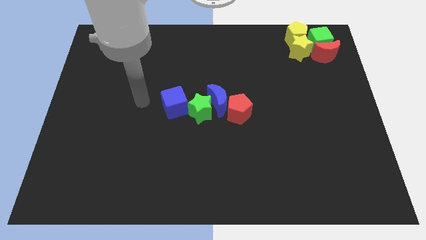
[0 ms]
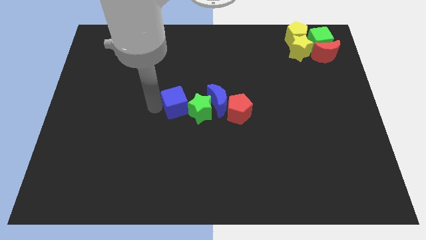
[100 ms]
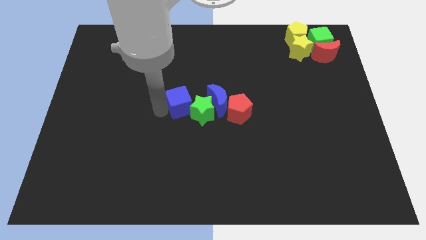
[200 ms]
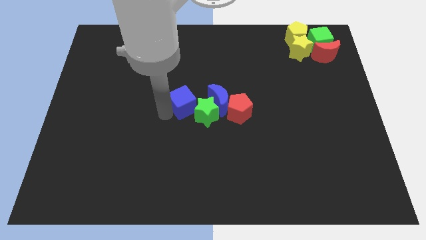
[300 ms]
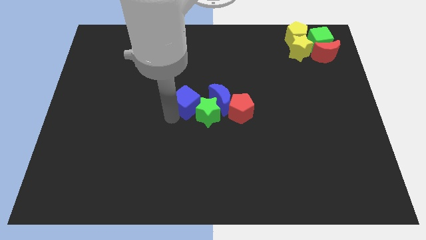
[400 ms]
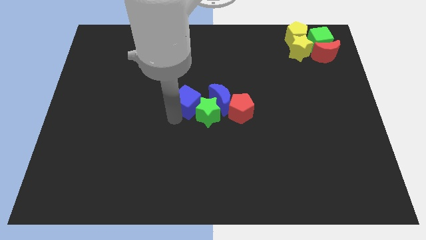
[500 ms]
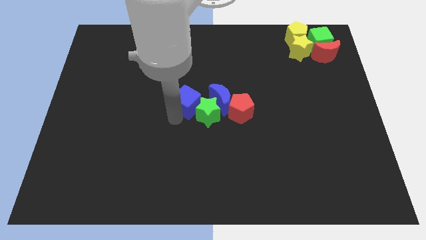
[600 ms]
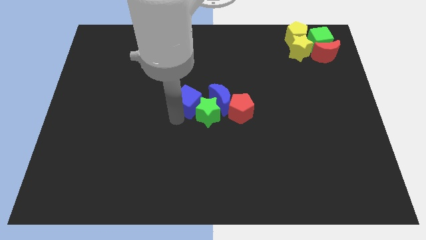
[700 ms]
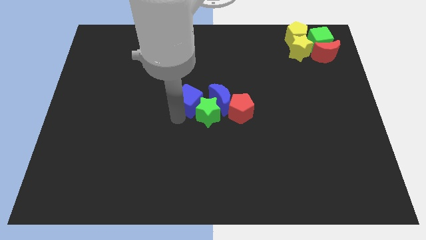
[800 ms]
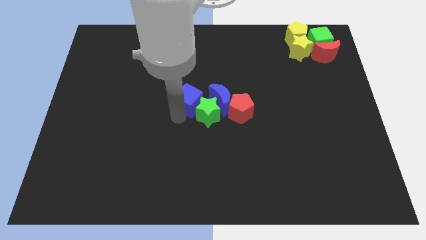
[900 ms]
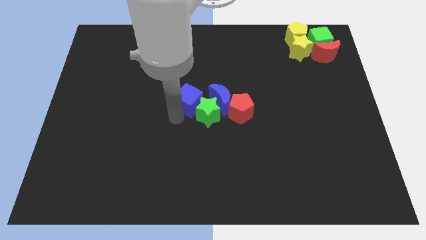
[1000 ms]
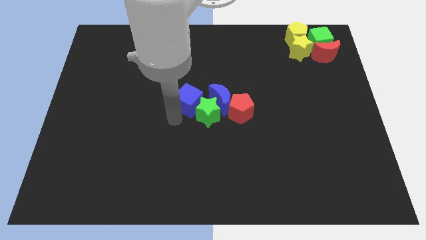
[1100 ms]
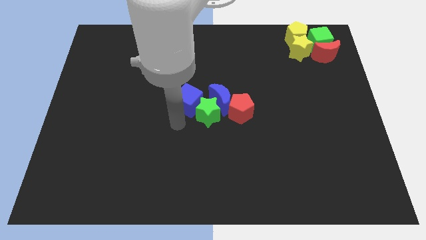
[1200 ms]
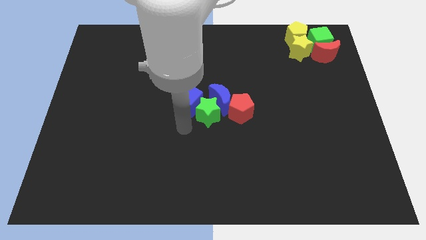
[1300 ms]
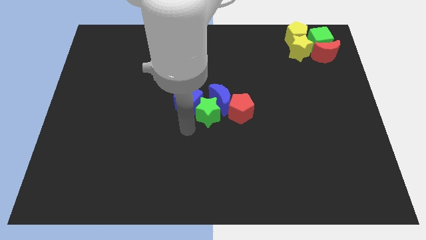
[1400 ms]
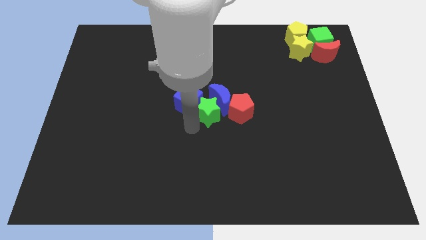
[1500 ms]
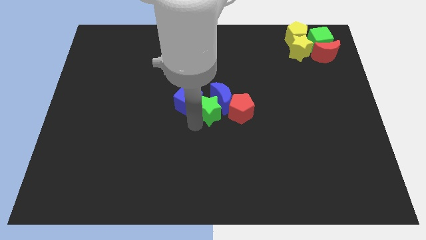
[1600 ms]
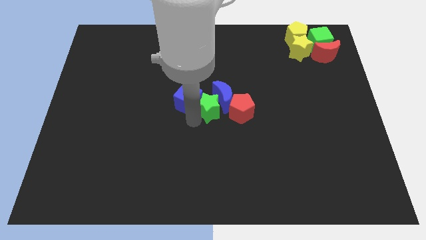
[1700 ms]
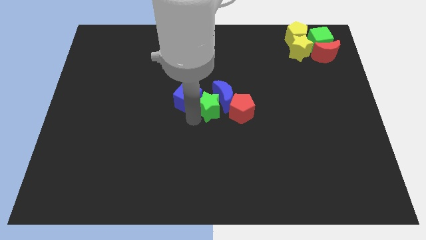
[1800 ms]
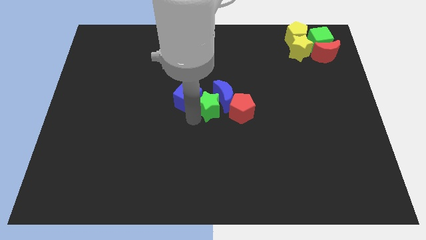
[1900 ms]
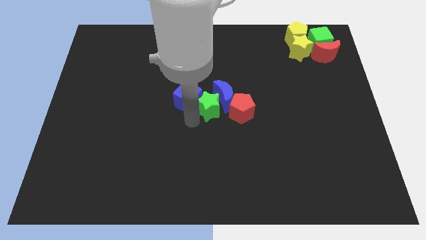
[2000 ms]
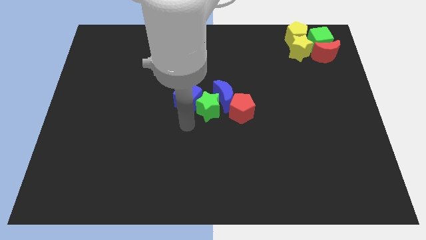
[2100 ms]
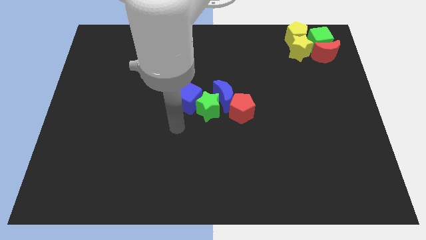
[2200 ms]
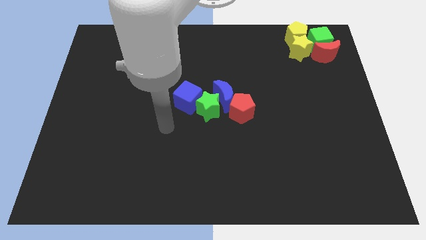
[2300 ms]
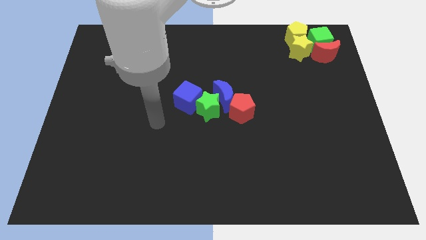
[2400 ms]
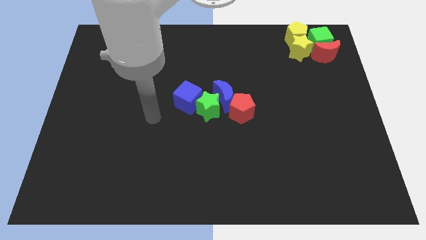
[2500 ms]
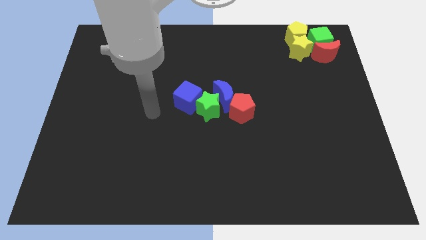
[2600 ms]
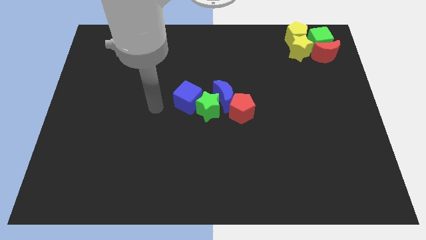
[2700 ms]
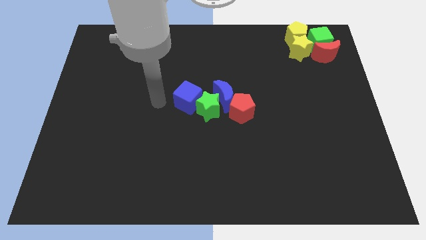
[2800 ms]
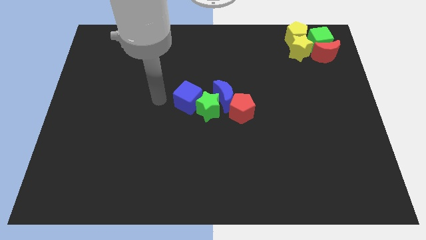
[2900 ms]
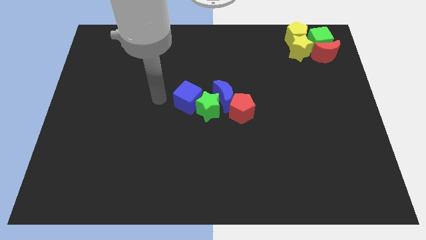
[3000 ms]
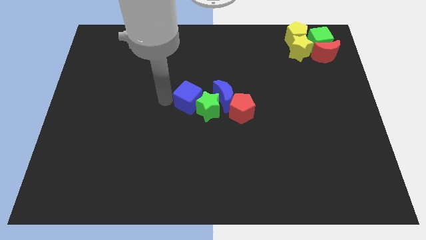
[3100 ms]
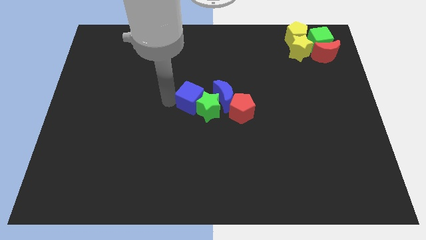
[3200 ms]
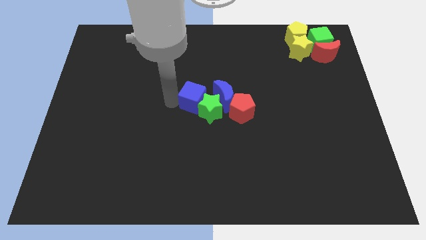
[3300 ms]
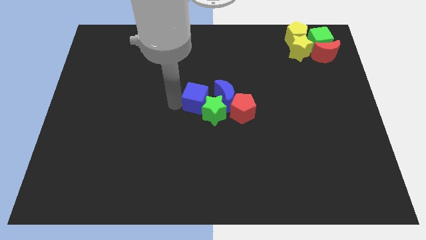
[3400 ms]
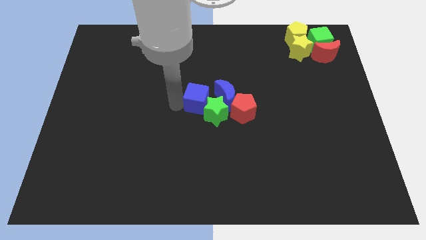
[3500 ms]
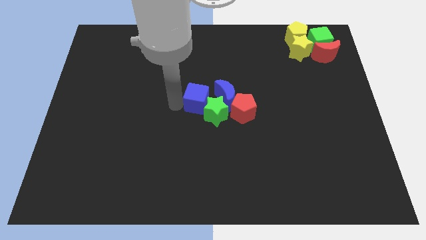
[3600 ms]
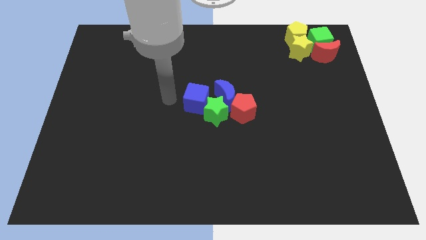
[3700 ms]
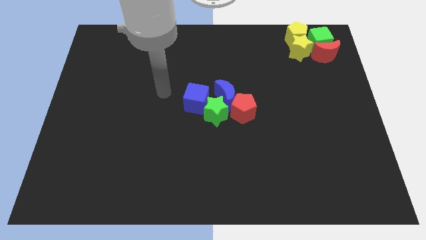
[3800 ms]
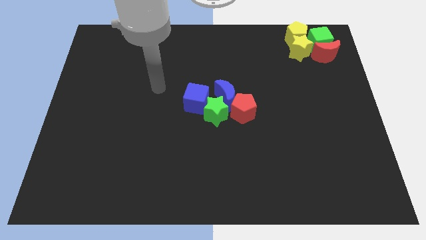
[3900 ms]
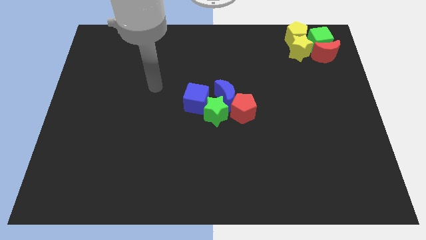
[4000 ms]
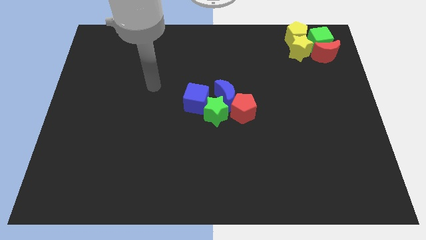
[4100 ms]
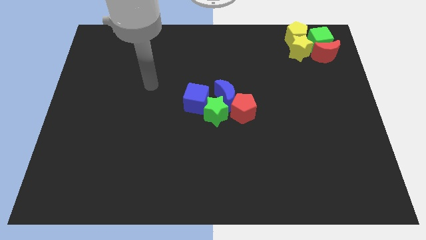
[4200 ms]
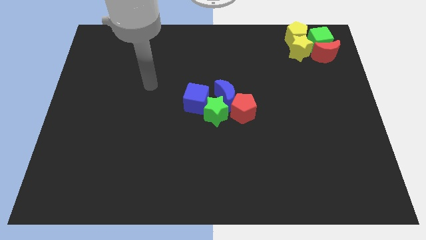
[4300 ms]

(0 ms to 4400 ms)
push the blue cube into the green star

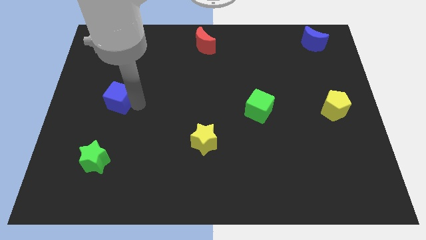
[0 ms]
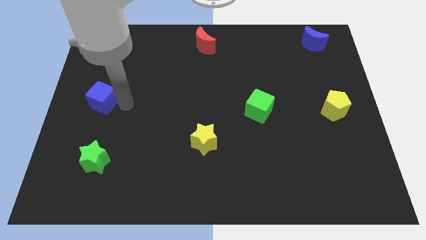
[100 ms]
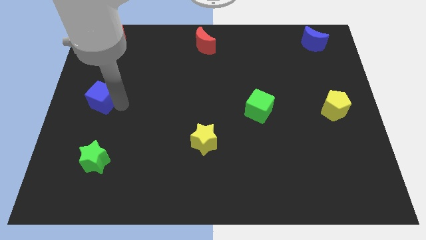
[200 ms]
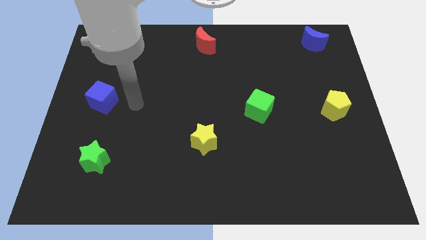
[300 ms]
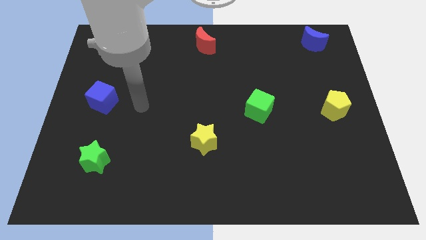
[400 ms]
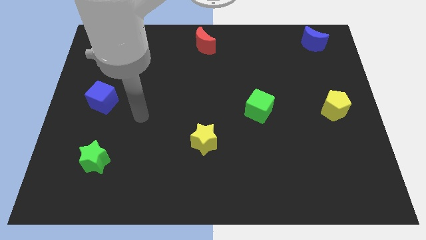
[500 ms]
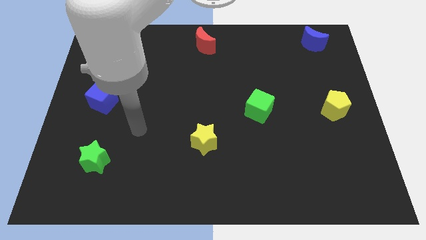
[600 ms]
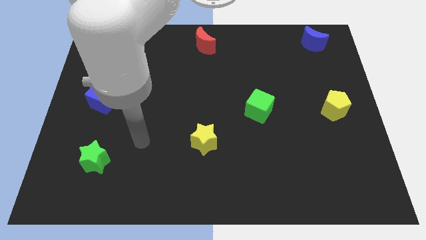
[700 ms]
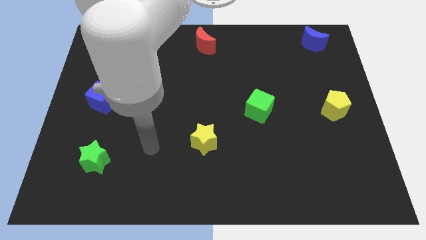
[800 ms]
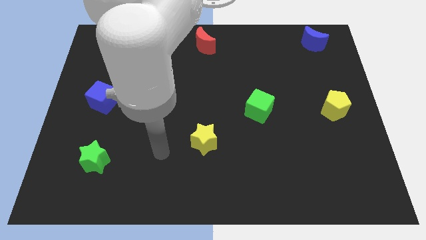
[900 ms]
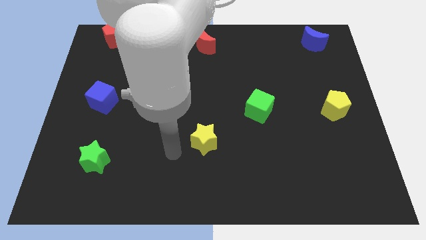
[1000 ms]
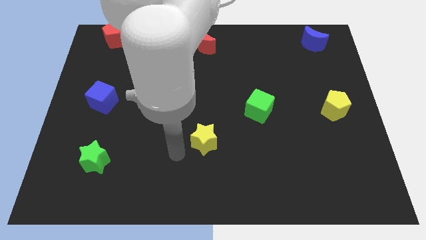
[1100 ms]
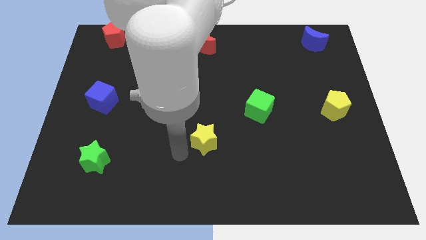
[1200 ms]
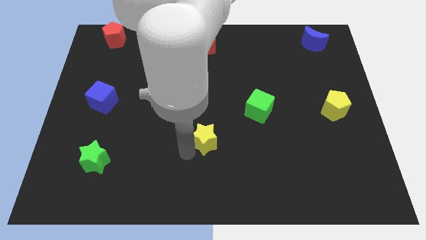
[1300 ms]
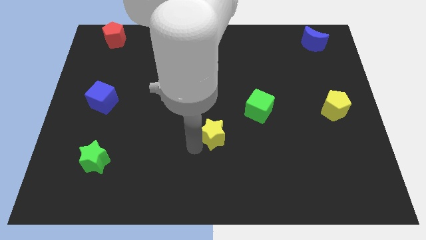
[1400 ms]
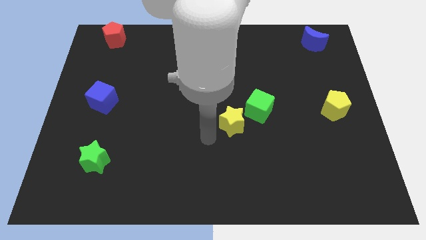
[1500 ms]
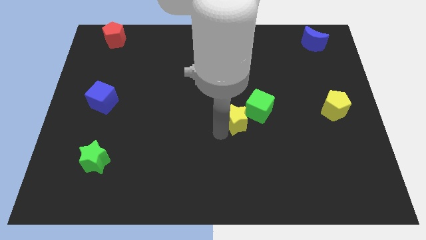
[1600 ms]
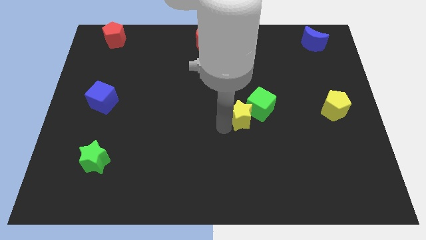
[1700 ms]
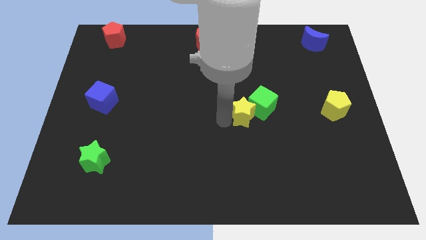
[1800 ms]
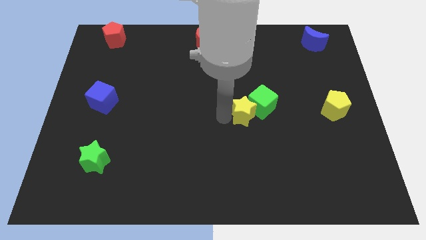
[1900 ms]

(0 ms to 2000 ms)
move the yellow star into the green cube

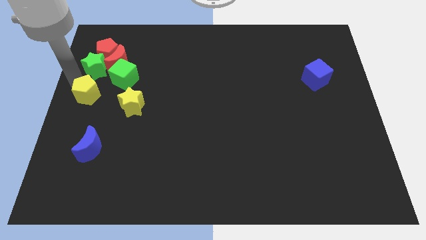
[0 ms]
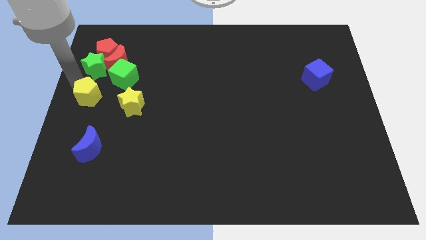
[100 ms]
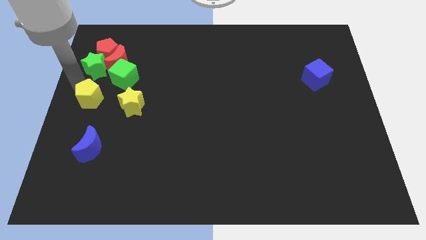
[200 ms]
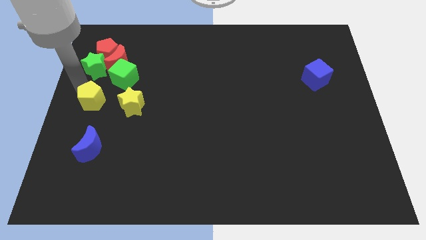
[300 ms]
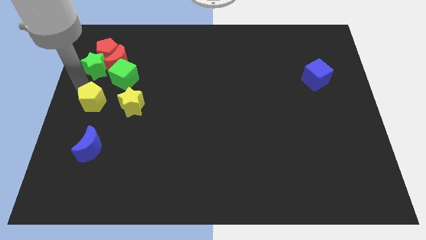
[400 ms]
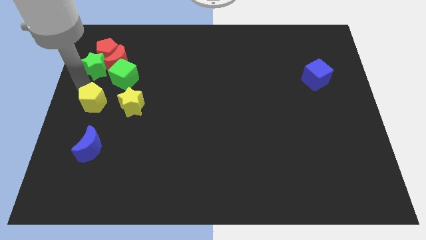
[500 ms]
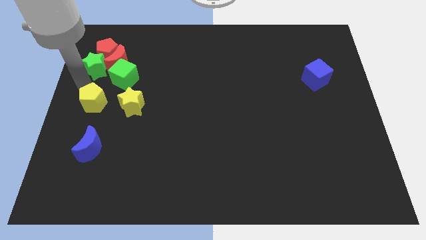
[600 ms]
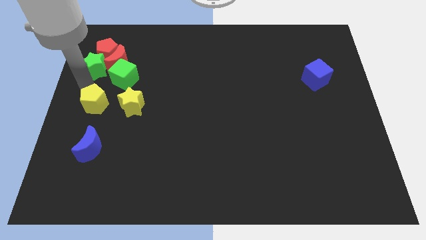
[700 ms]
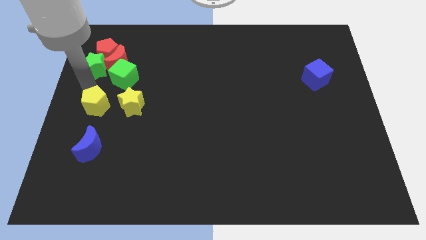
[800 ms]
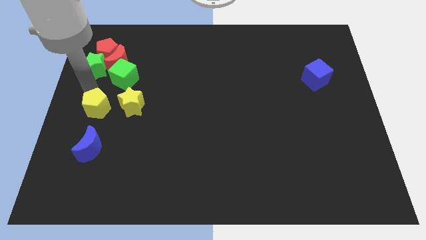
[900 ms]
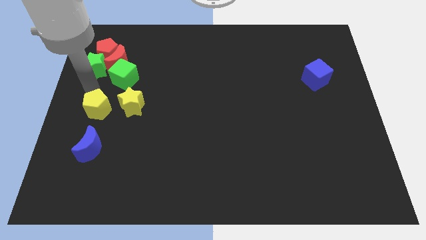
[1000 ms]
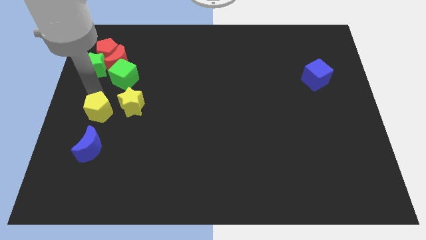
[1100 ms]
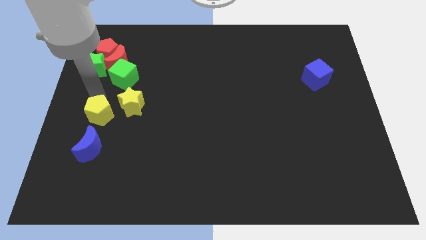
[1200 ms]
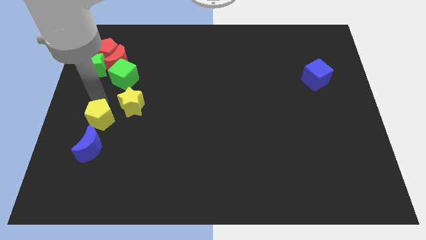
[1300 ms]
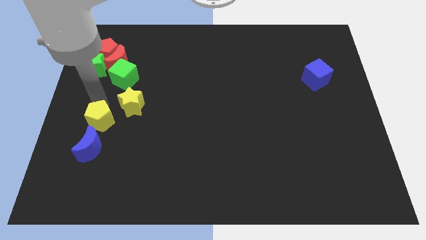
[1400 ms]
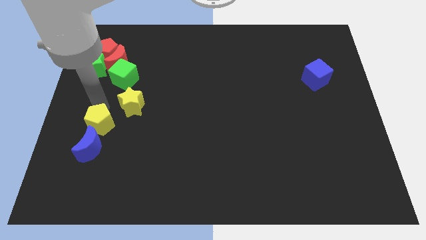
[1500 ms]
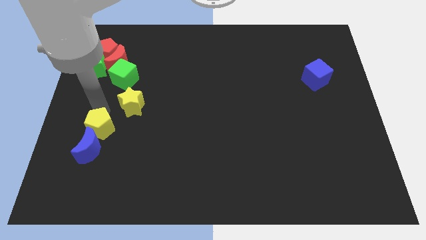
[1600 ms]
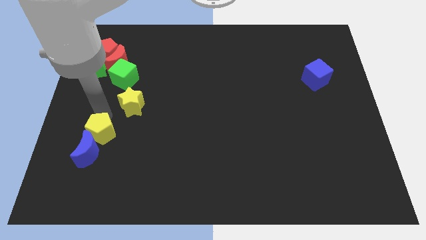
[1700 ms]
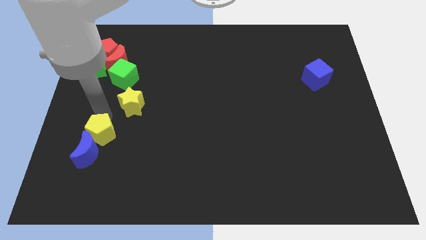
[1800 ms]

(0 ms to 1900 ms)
drag the yellow pentagon into the top side of the blue crescent

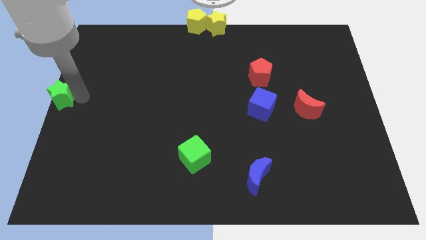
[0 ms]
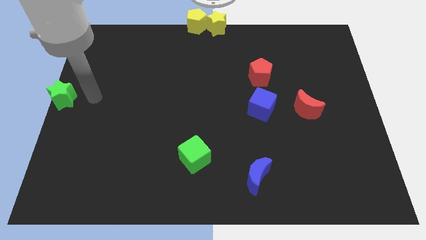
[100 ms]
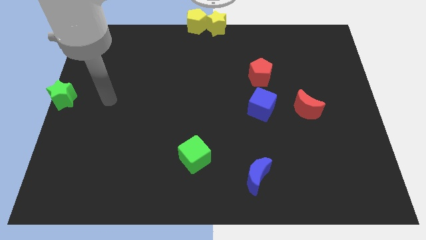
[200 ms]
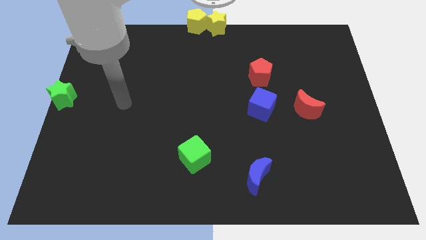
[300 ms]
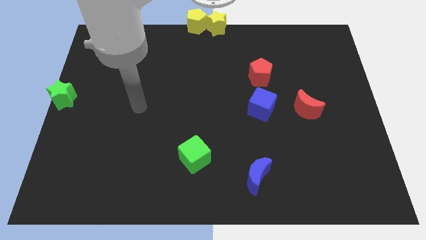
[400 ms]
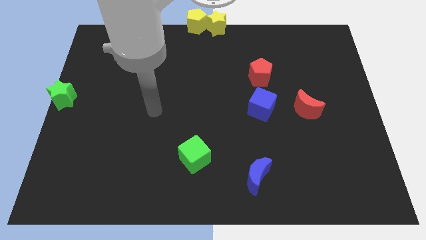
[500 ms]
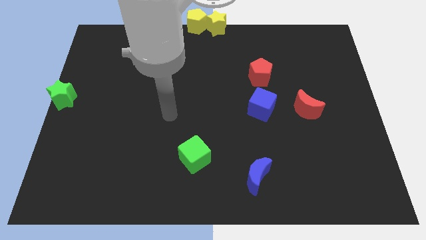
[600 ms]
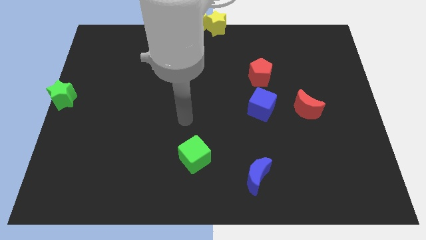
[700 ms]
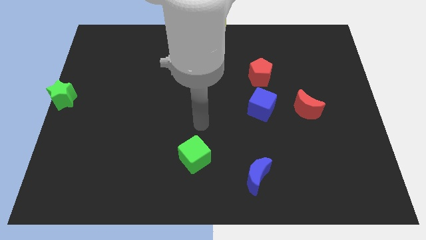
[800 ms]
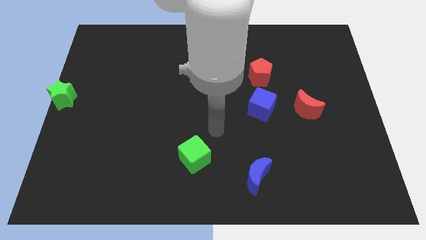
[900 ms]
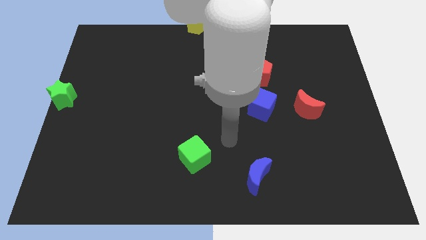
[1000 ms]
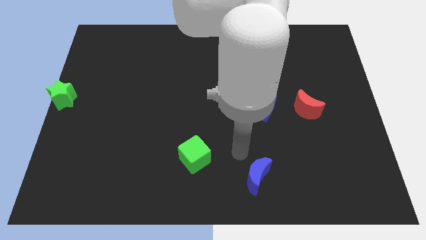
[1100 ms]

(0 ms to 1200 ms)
move the arm away from the green star
